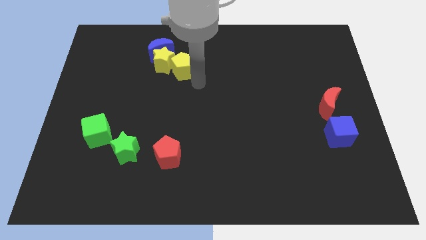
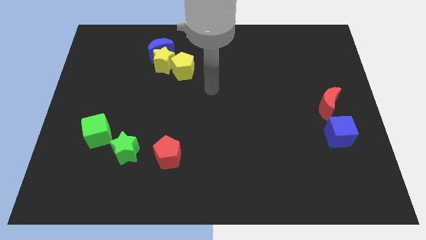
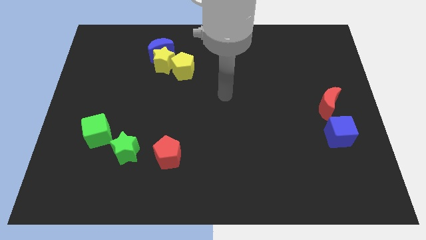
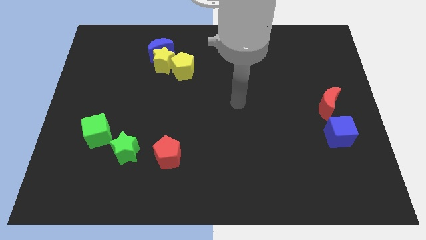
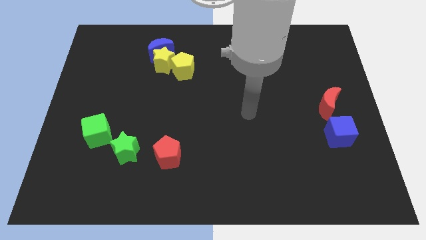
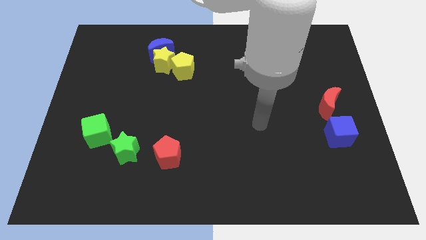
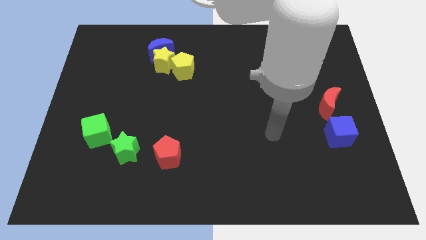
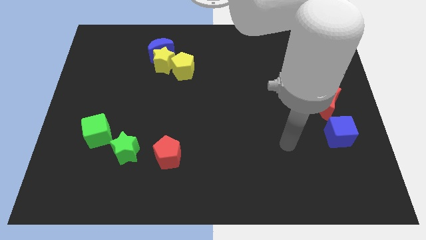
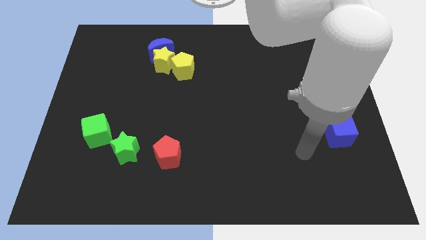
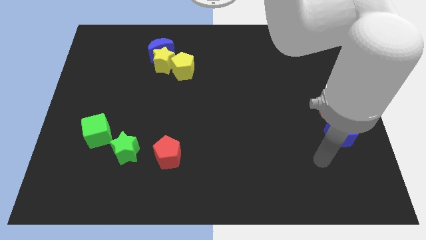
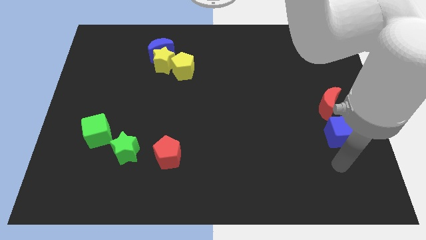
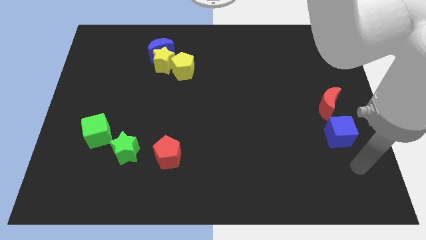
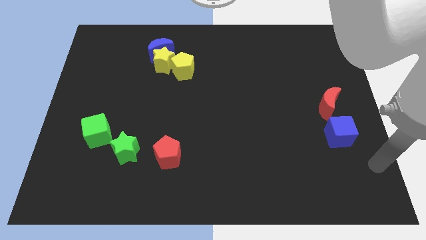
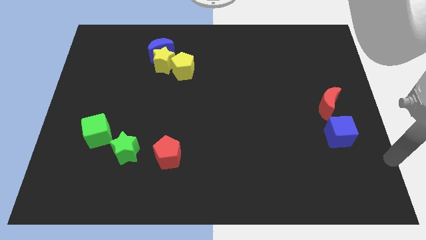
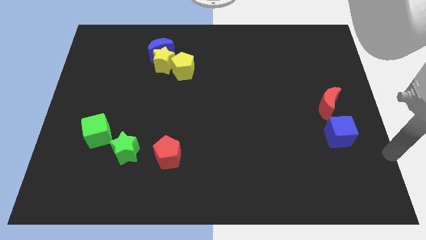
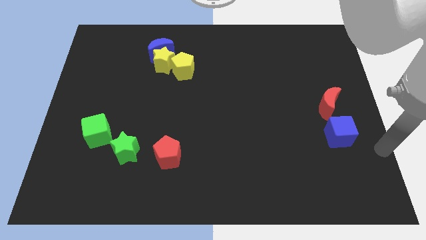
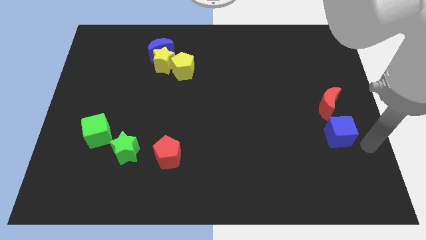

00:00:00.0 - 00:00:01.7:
move the arm to the right of the blue cube

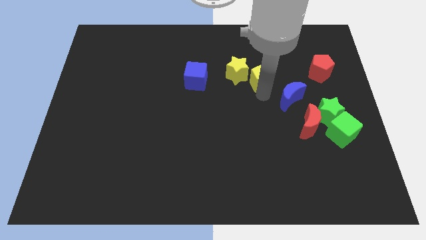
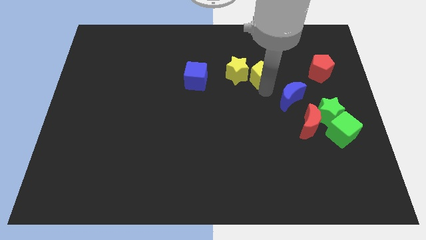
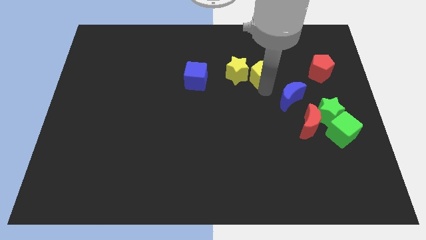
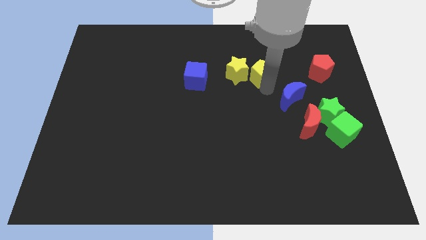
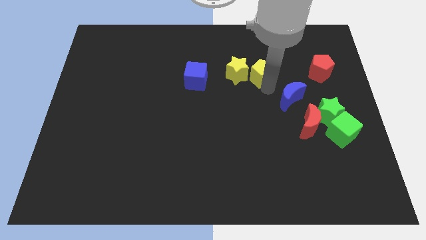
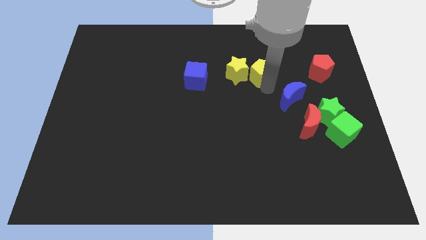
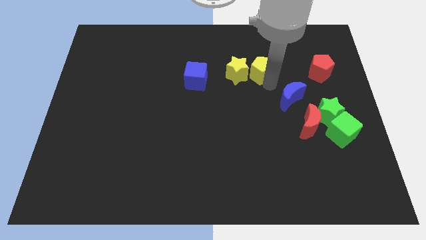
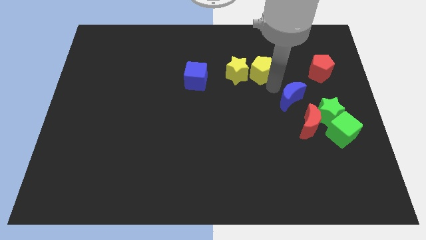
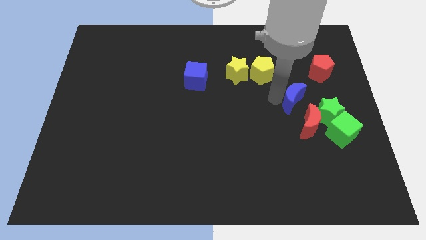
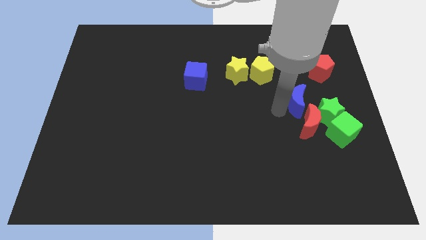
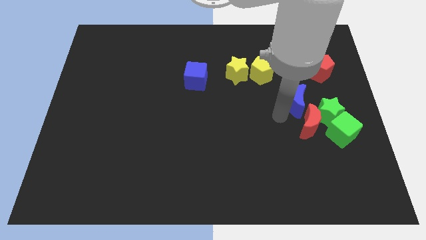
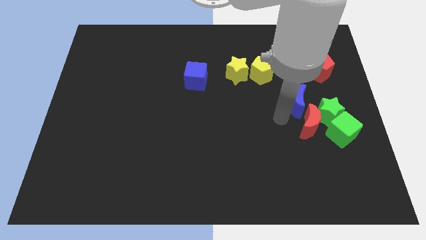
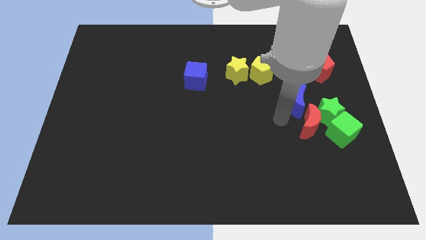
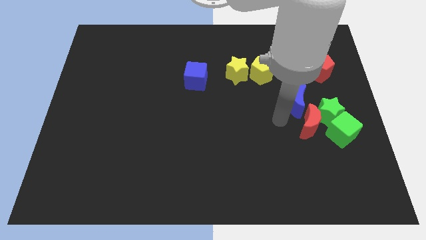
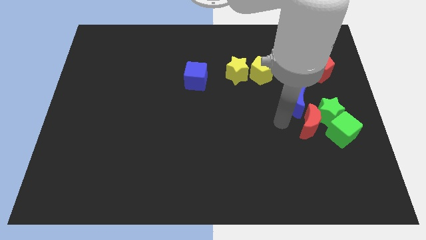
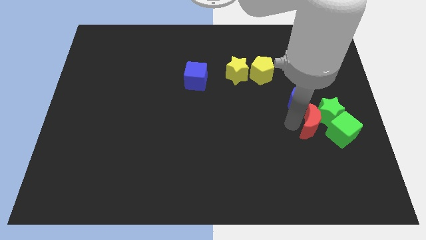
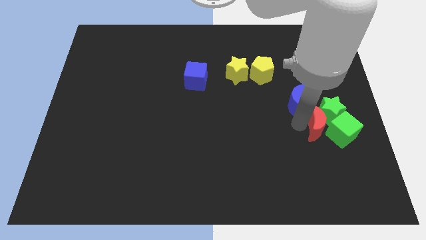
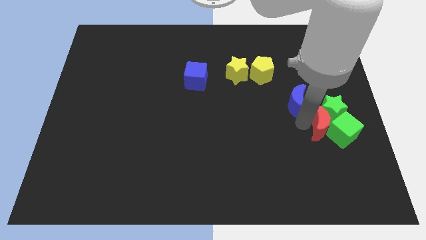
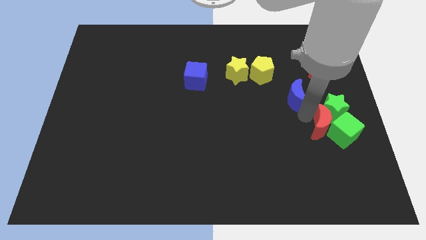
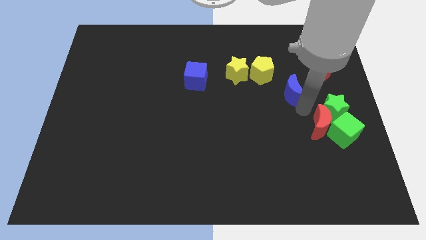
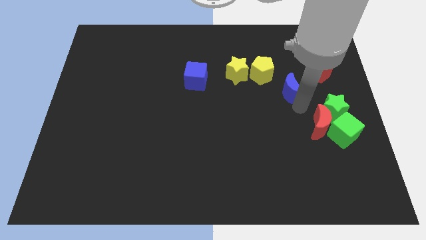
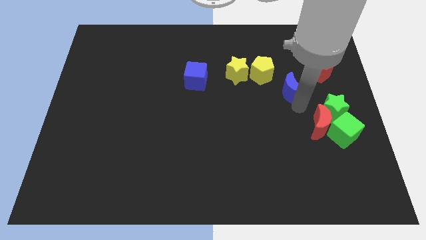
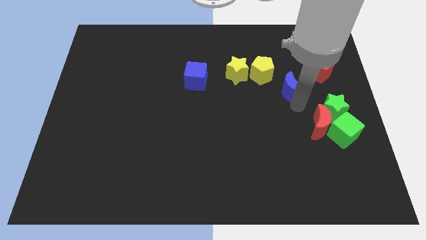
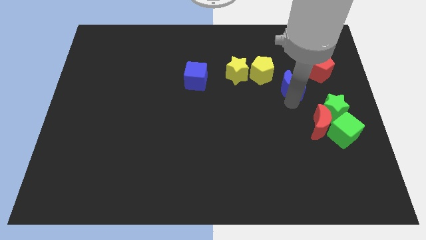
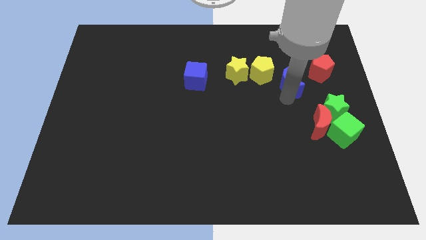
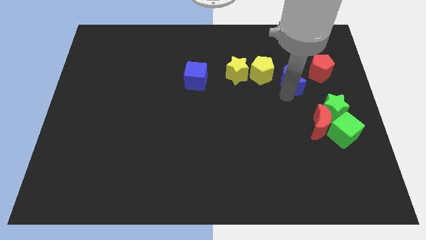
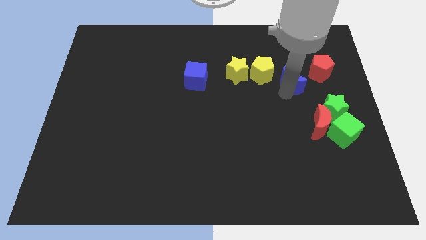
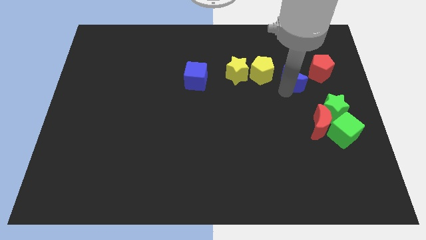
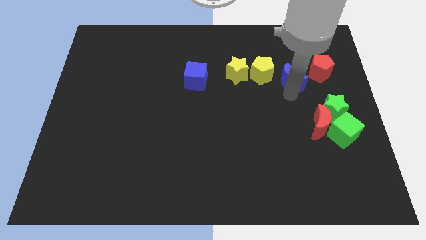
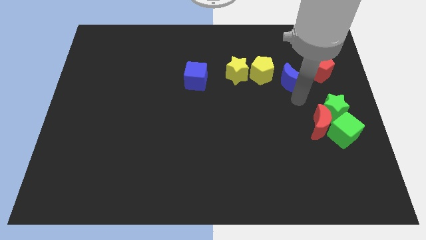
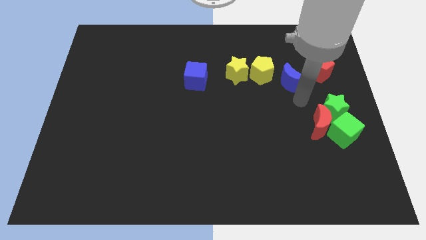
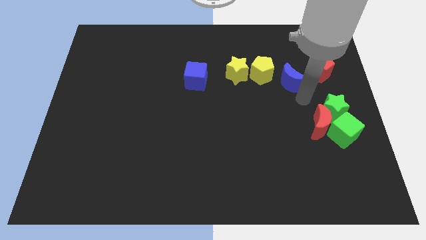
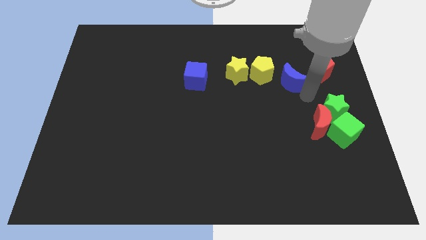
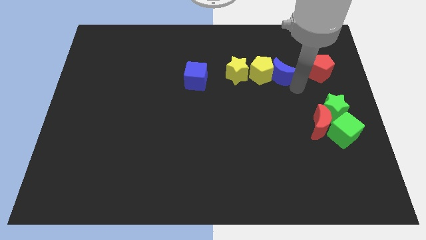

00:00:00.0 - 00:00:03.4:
put the blue moon between the yellow pentagon and red pentagon

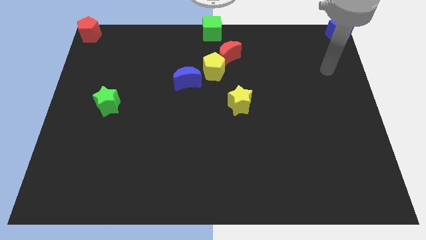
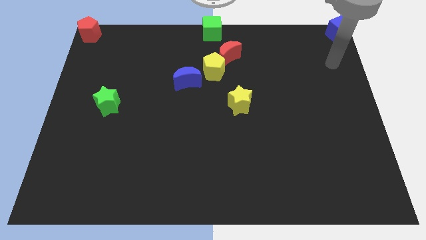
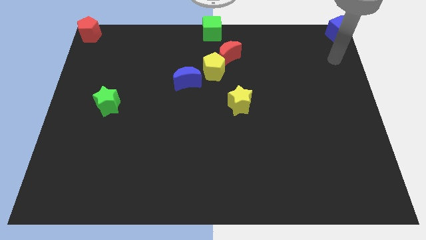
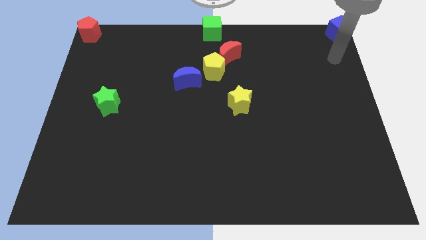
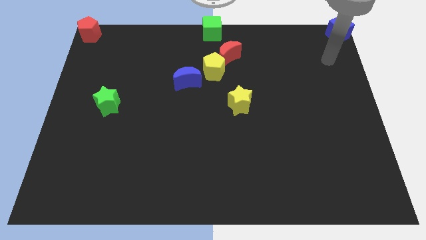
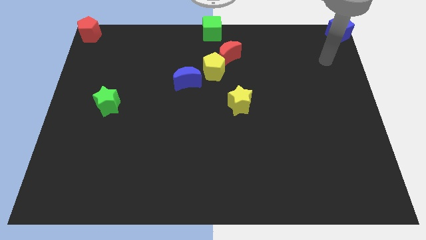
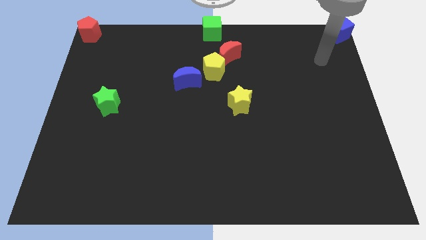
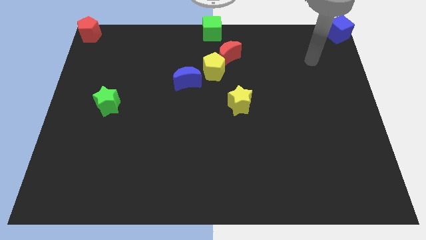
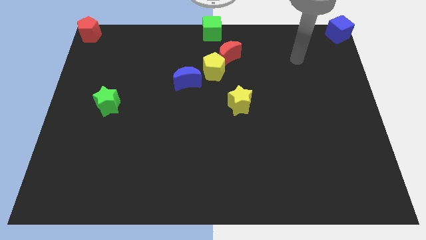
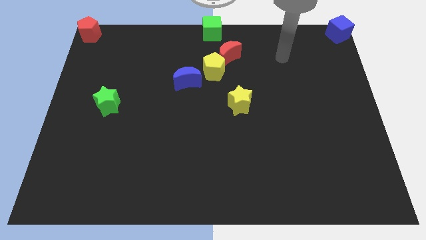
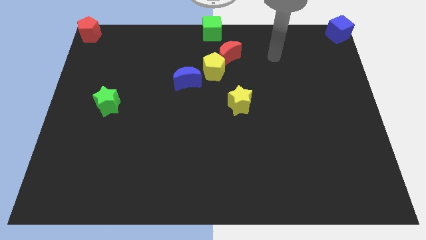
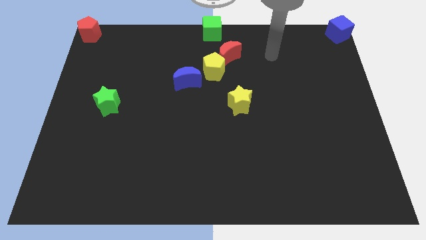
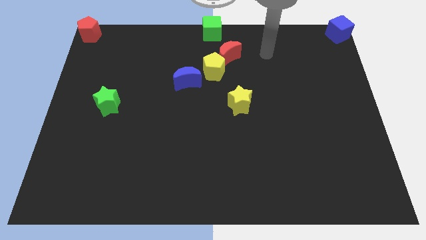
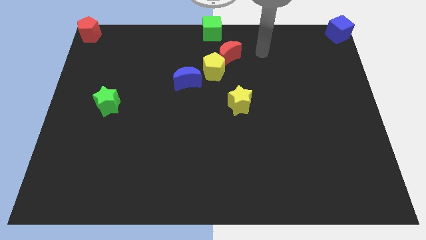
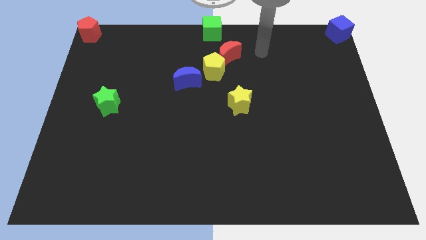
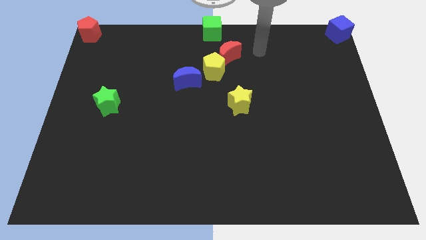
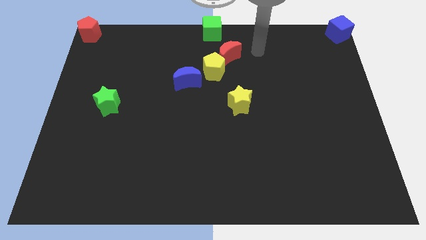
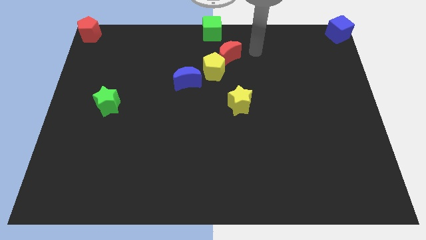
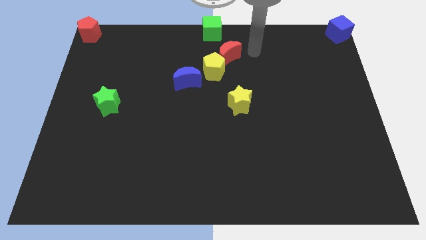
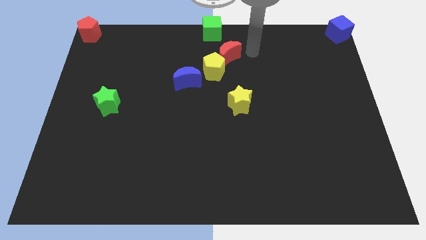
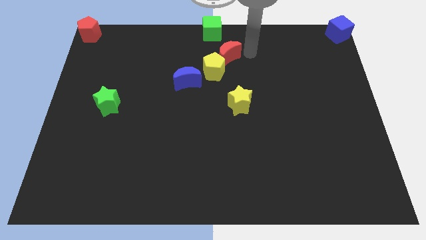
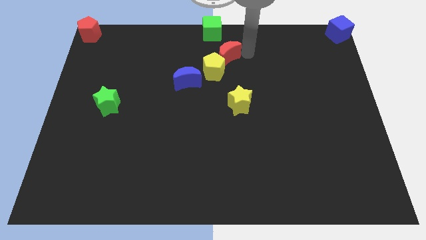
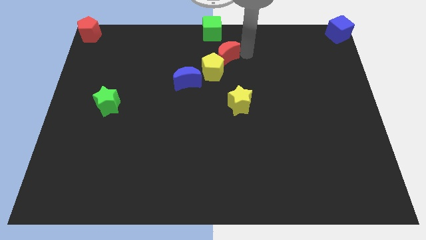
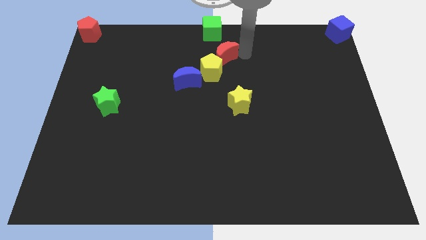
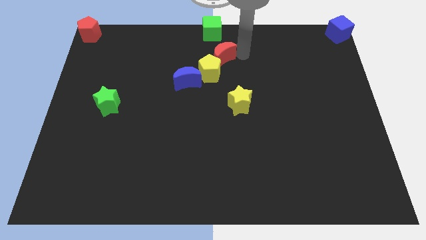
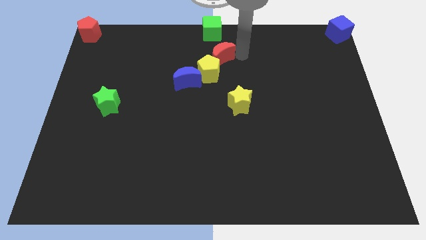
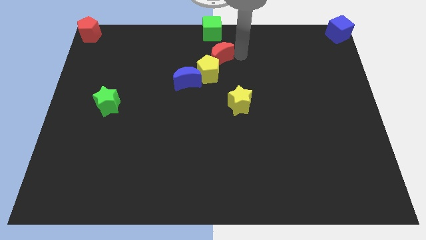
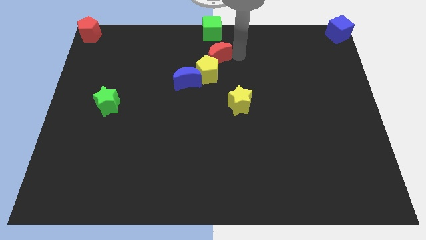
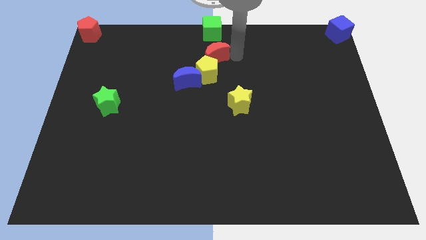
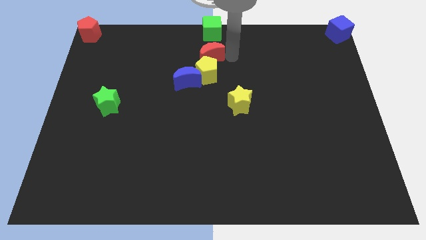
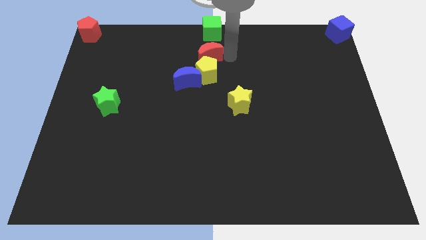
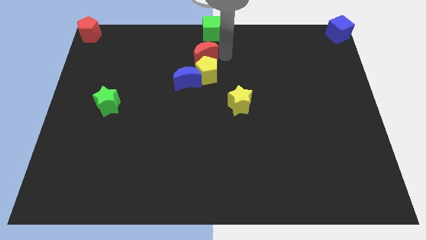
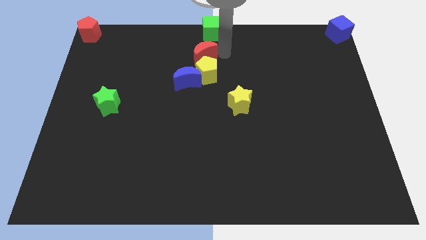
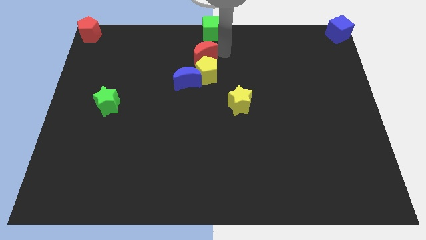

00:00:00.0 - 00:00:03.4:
place the red crescent above the yellow pentagon

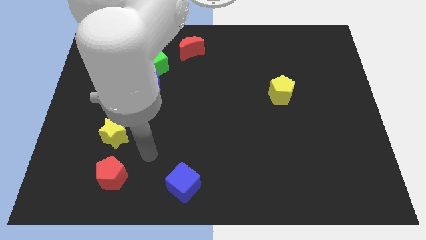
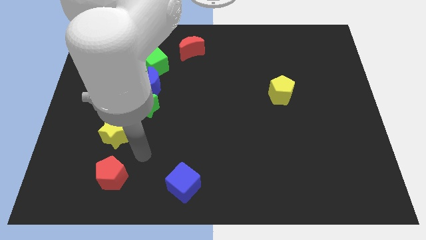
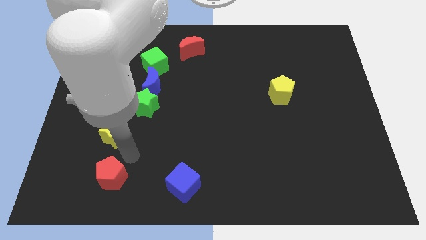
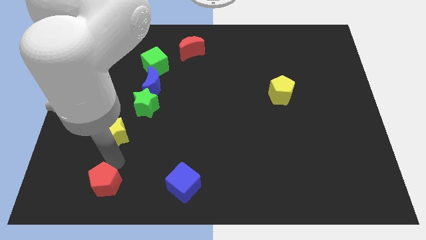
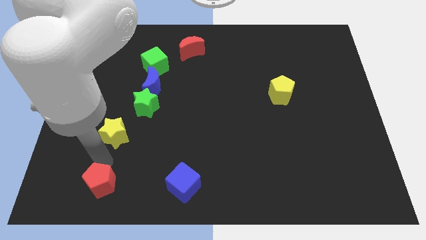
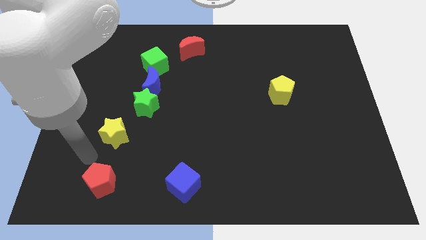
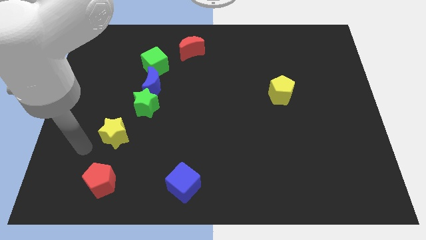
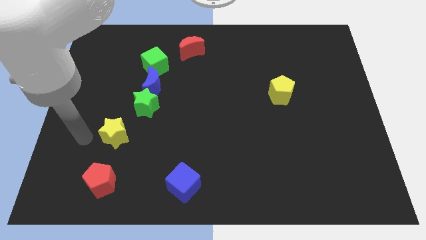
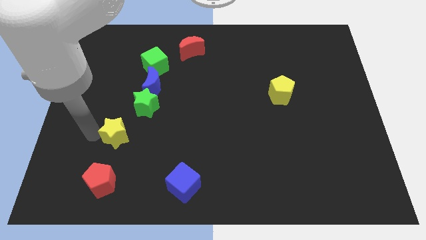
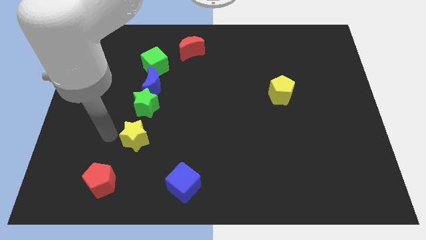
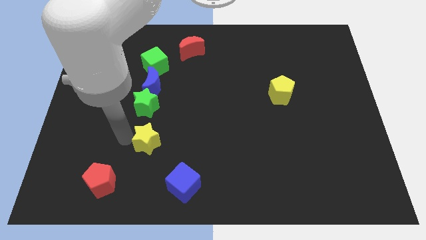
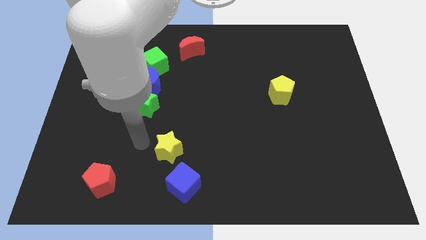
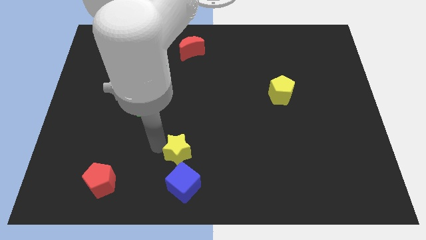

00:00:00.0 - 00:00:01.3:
move the yellow star above the blue cube
